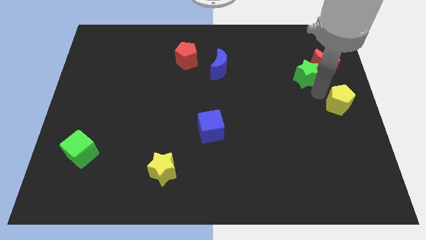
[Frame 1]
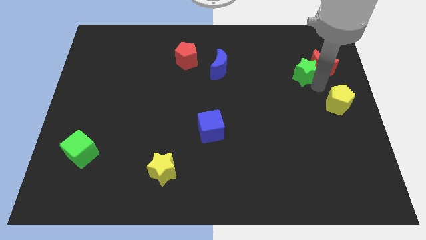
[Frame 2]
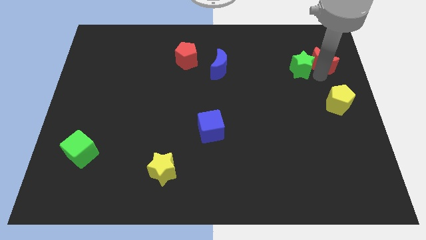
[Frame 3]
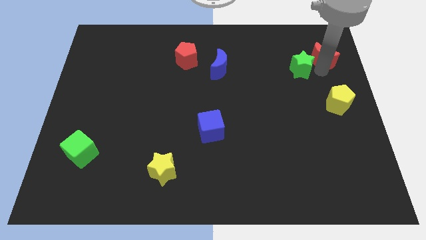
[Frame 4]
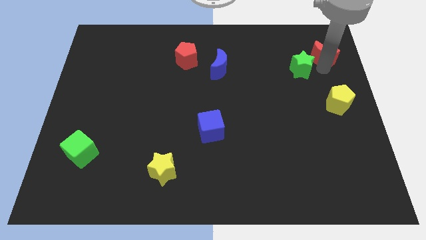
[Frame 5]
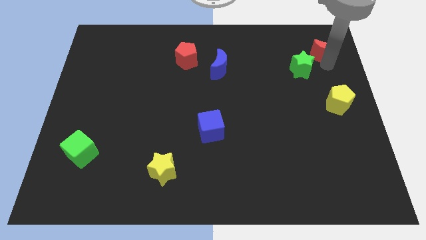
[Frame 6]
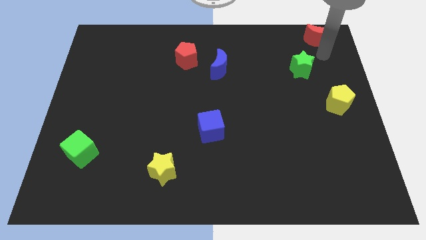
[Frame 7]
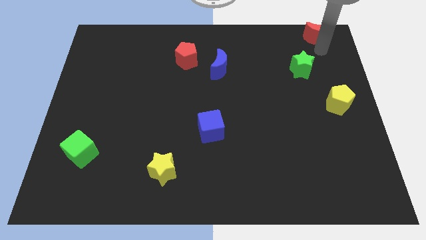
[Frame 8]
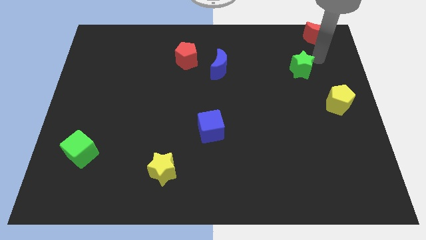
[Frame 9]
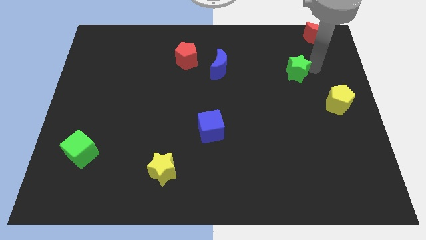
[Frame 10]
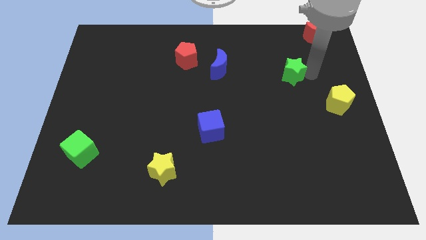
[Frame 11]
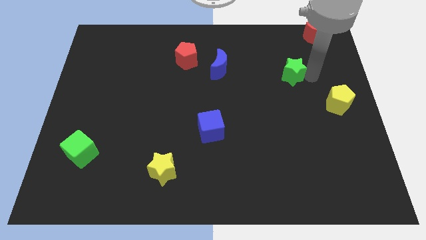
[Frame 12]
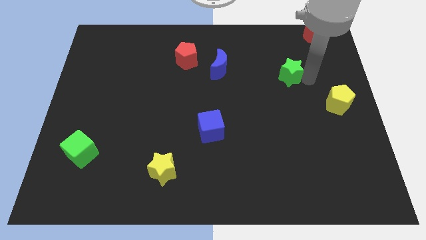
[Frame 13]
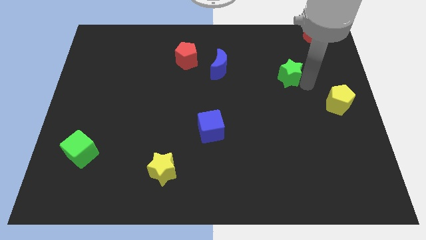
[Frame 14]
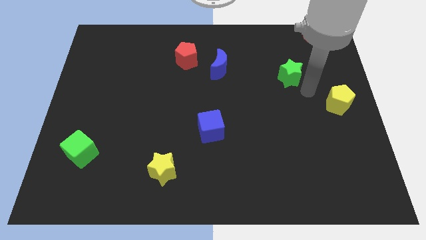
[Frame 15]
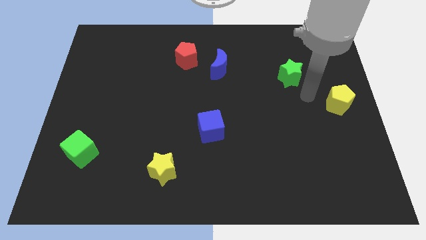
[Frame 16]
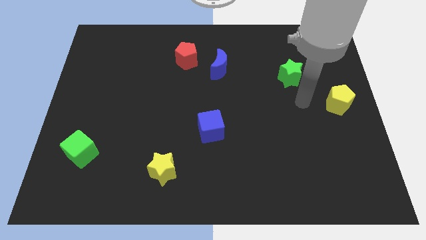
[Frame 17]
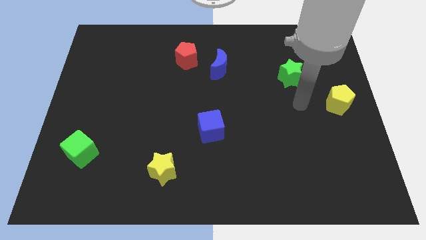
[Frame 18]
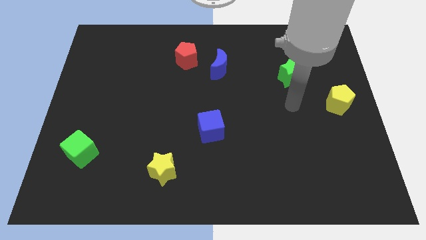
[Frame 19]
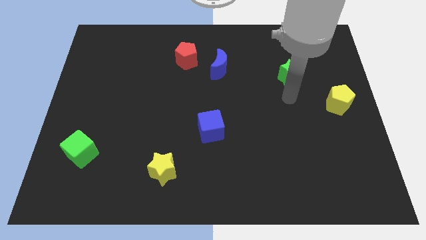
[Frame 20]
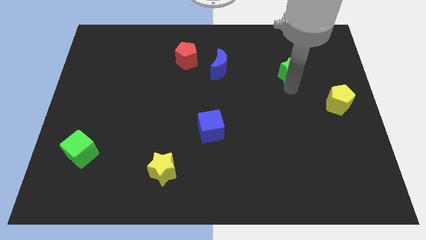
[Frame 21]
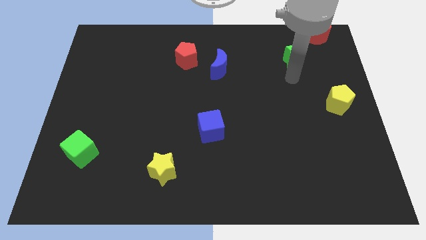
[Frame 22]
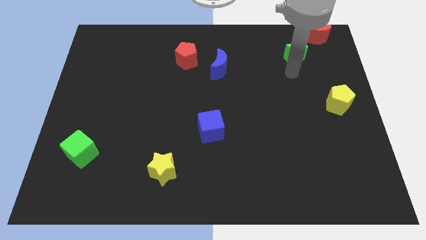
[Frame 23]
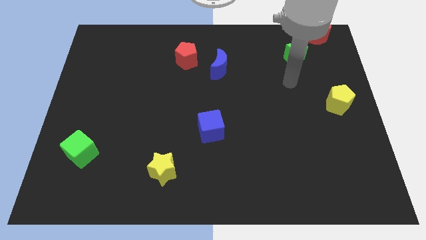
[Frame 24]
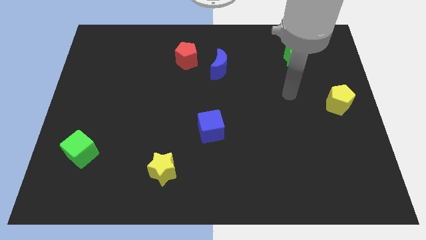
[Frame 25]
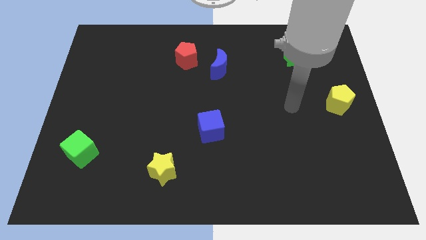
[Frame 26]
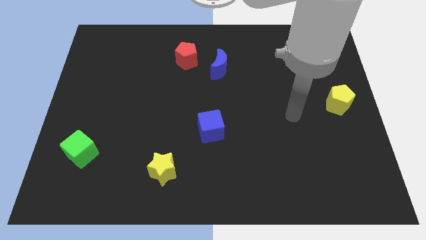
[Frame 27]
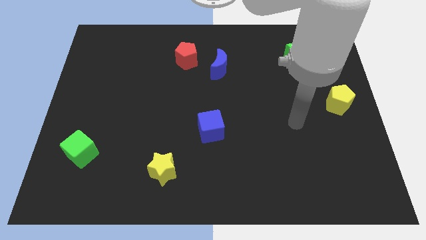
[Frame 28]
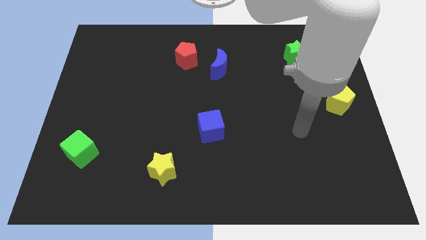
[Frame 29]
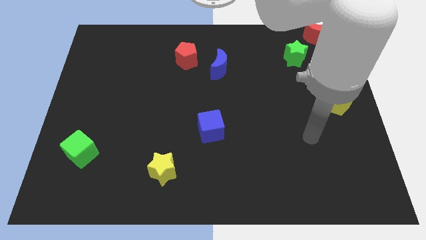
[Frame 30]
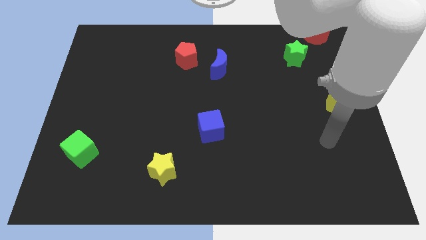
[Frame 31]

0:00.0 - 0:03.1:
push the red moon and green star to the top side of the board

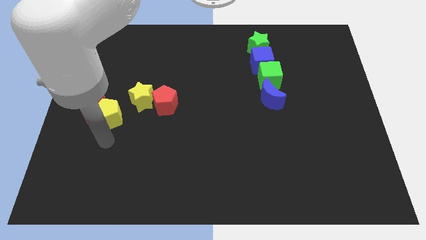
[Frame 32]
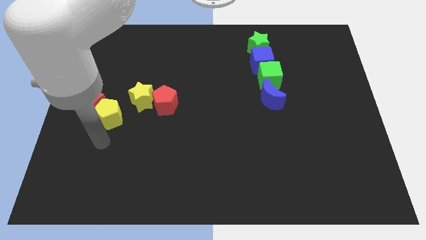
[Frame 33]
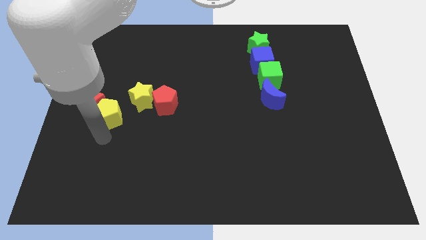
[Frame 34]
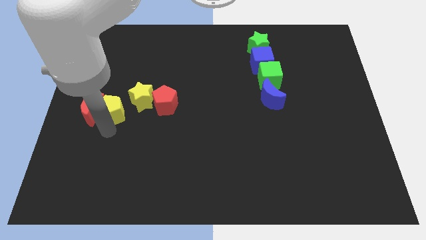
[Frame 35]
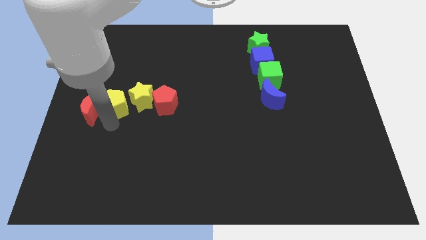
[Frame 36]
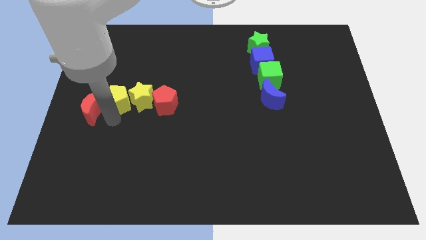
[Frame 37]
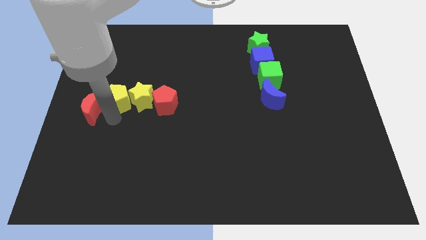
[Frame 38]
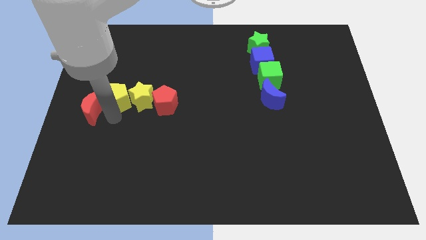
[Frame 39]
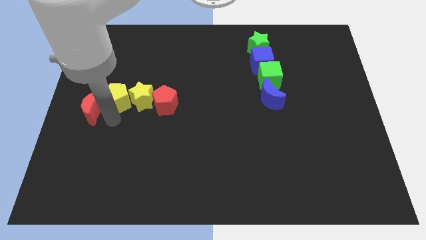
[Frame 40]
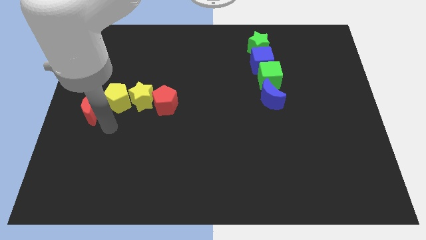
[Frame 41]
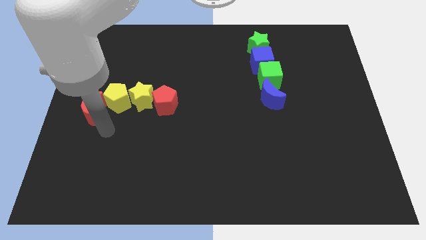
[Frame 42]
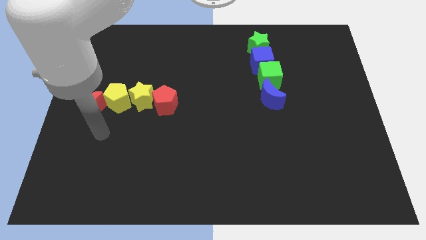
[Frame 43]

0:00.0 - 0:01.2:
move the yellow pentagon to the left of the yellow star

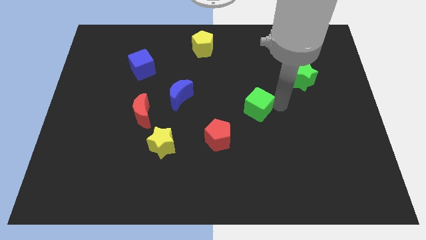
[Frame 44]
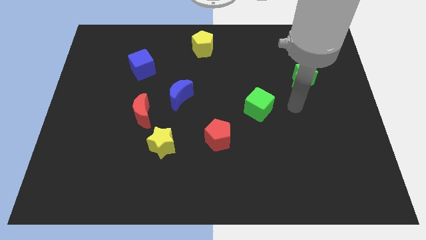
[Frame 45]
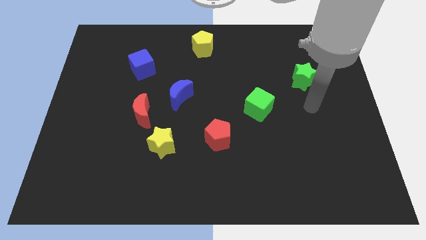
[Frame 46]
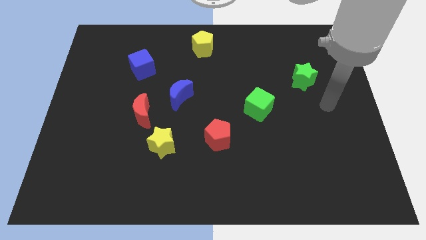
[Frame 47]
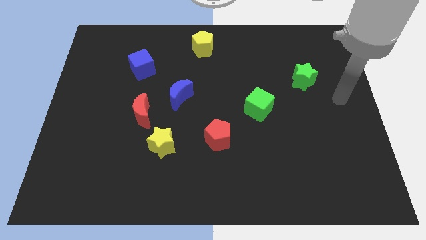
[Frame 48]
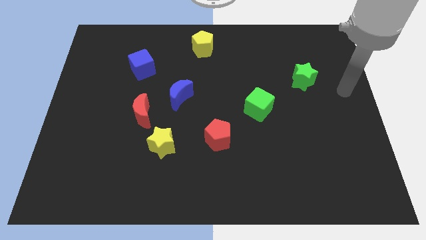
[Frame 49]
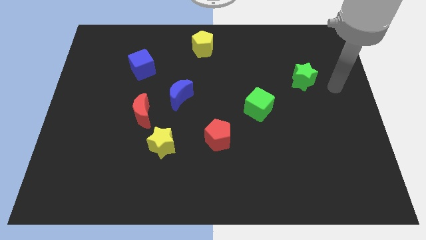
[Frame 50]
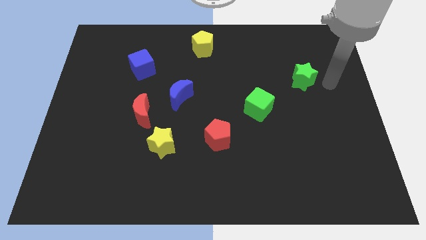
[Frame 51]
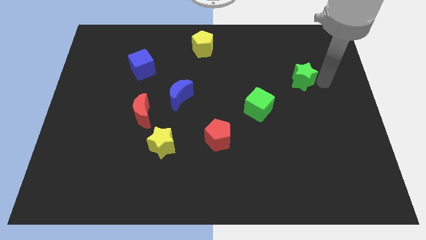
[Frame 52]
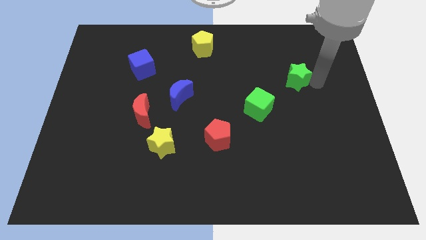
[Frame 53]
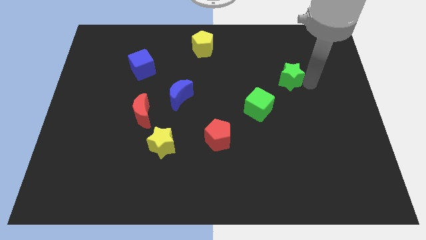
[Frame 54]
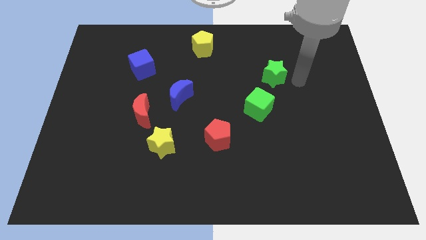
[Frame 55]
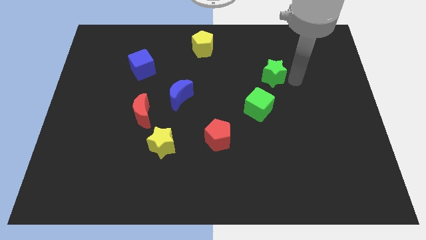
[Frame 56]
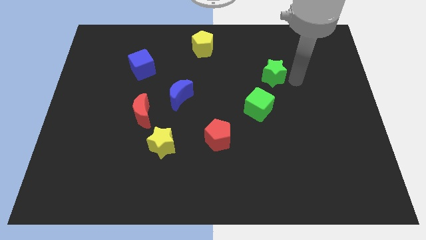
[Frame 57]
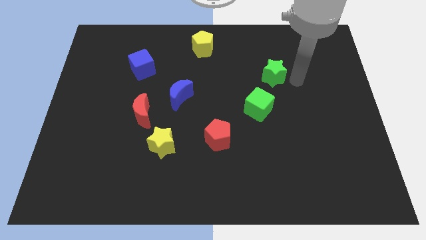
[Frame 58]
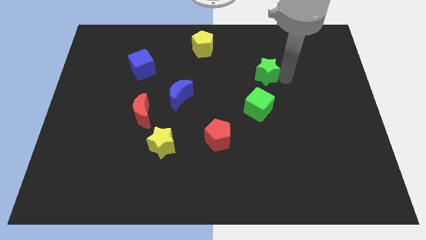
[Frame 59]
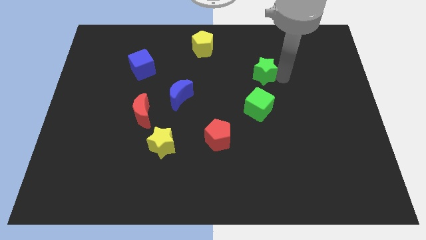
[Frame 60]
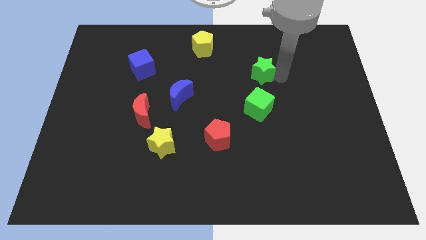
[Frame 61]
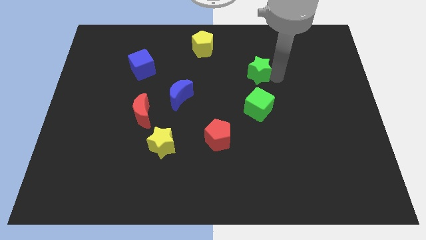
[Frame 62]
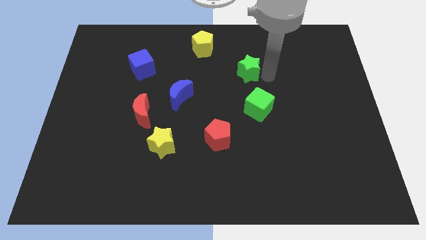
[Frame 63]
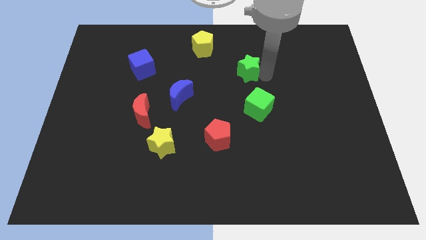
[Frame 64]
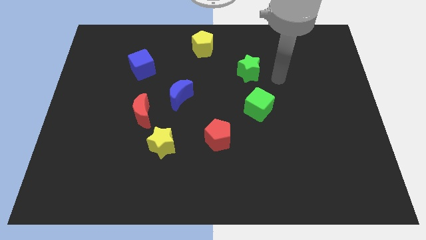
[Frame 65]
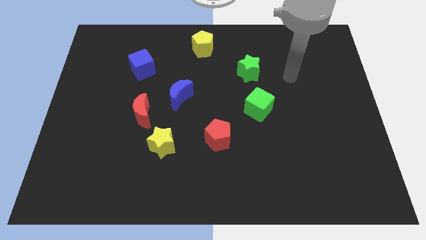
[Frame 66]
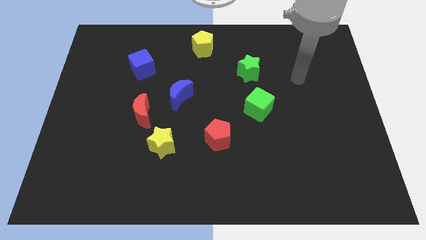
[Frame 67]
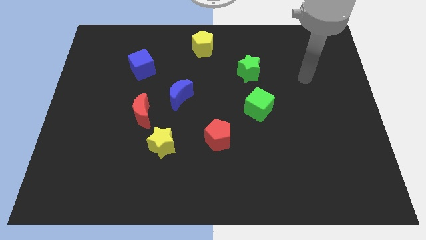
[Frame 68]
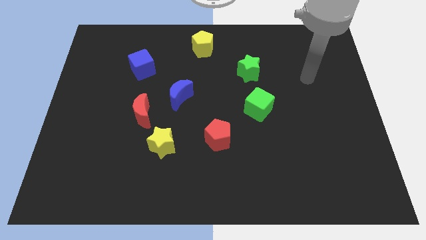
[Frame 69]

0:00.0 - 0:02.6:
push the green star towards left

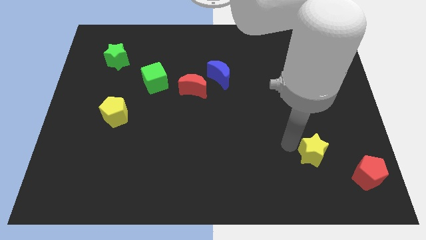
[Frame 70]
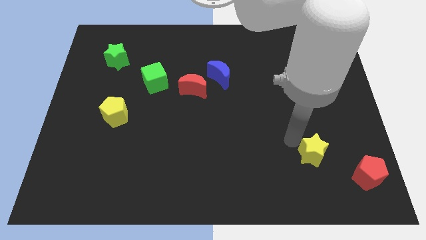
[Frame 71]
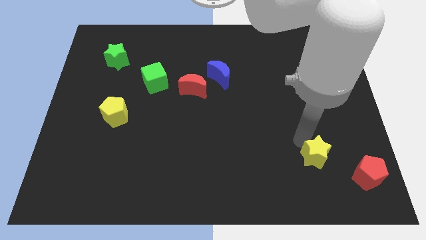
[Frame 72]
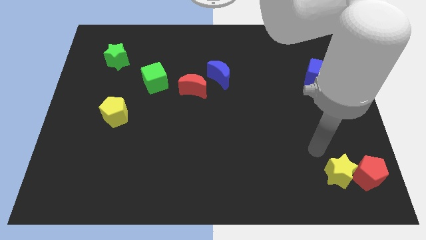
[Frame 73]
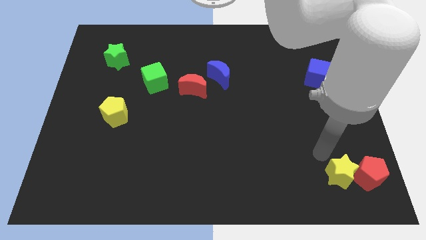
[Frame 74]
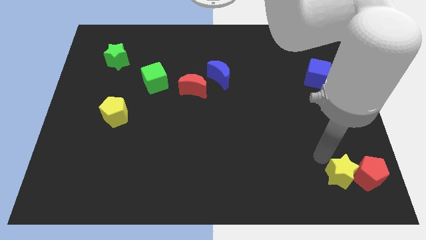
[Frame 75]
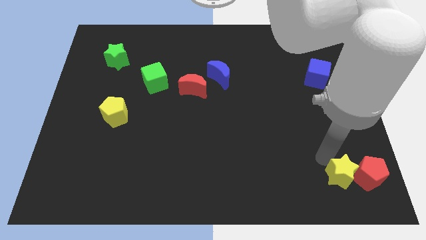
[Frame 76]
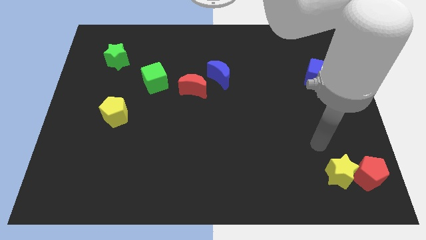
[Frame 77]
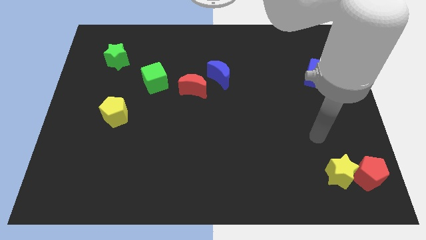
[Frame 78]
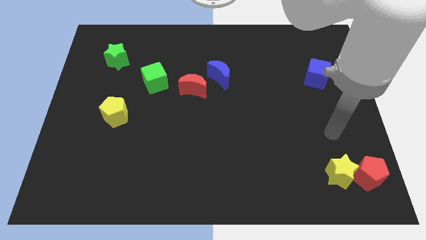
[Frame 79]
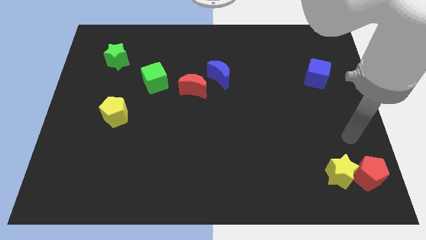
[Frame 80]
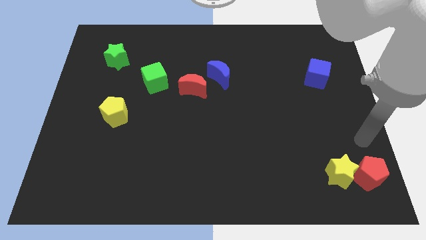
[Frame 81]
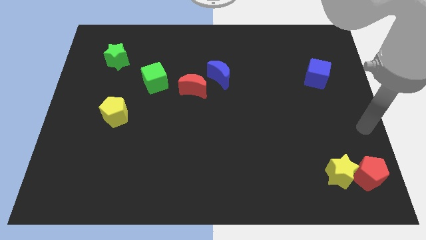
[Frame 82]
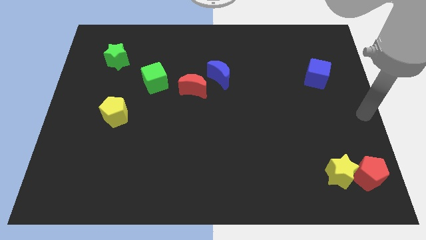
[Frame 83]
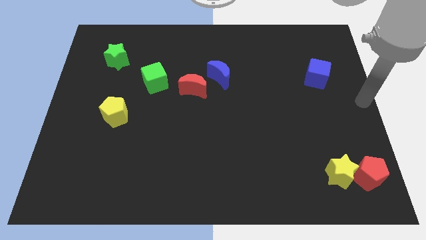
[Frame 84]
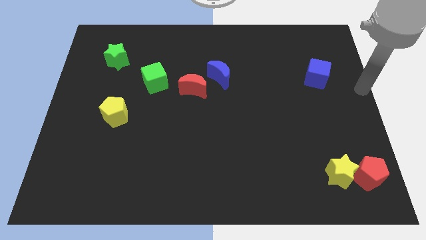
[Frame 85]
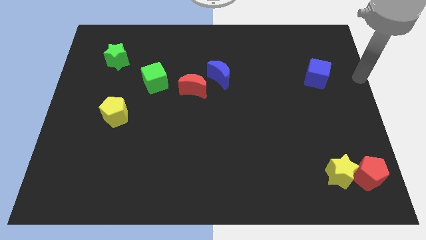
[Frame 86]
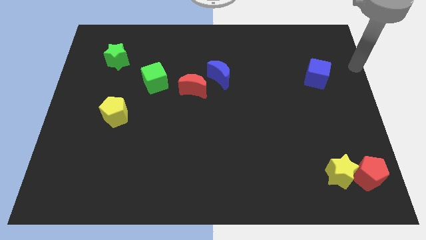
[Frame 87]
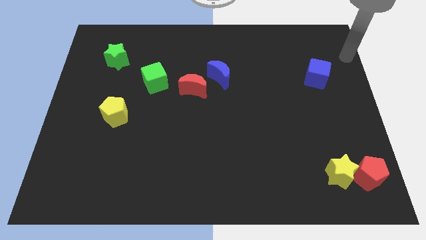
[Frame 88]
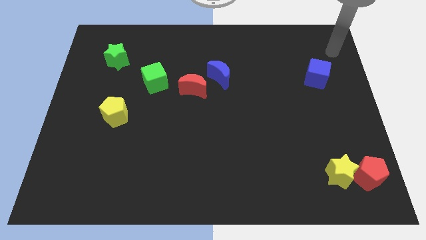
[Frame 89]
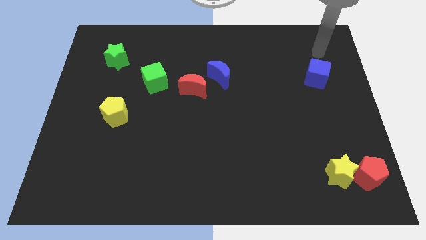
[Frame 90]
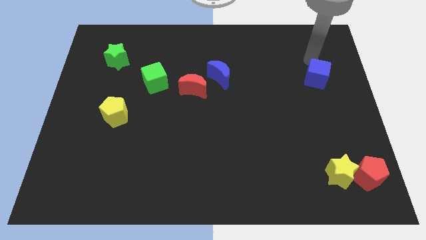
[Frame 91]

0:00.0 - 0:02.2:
push the yellow star into the red pentagon

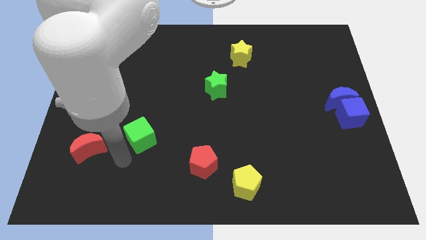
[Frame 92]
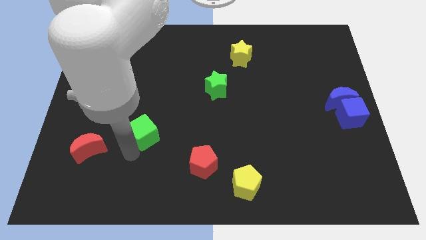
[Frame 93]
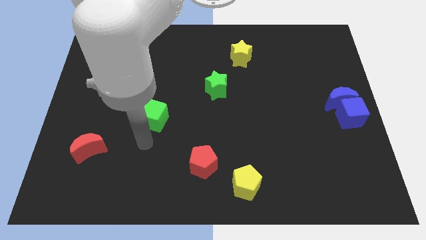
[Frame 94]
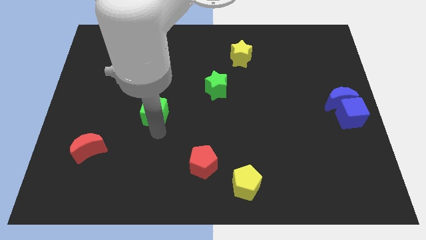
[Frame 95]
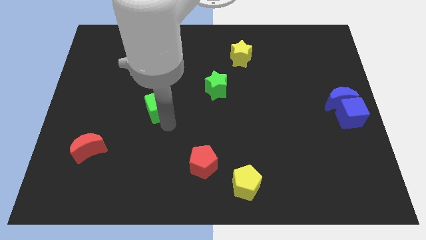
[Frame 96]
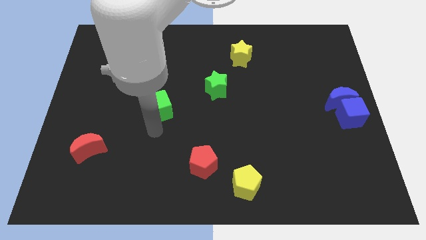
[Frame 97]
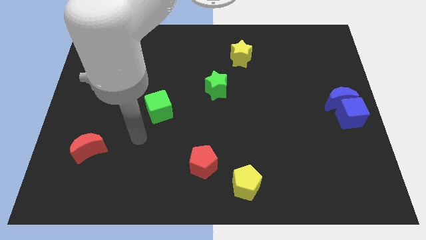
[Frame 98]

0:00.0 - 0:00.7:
place the green cube diagonally to green star
